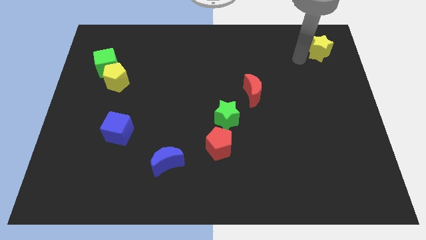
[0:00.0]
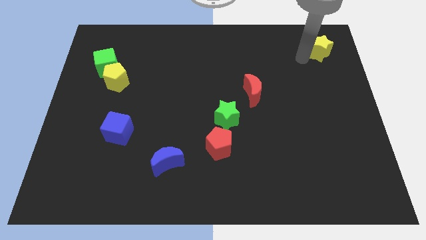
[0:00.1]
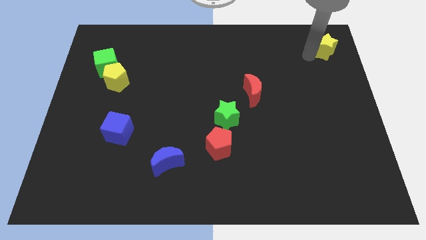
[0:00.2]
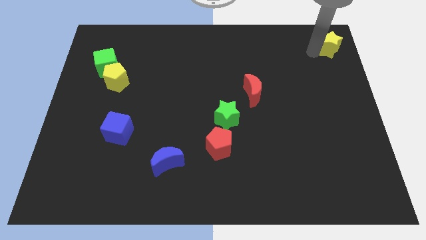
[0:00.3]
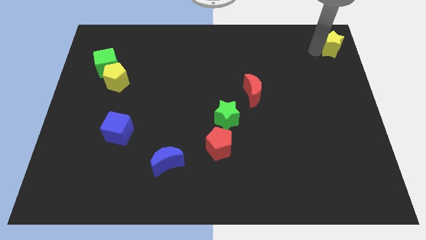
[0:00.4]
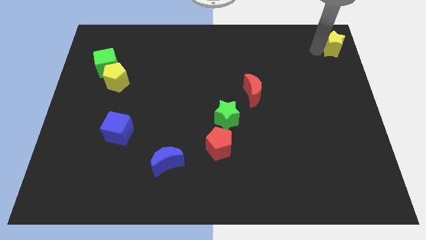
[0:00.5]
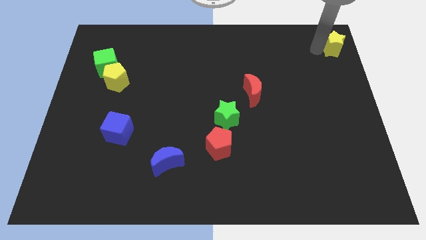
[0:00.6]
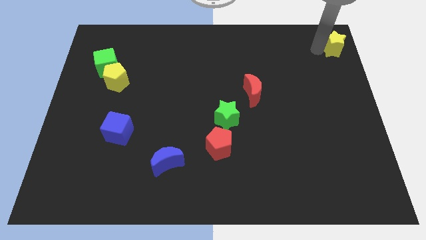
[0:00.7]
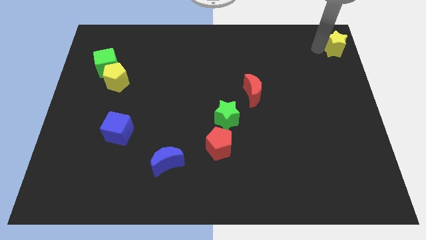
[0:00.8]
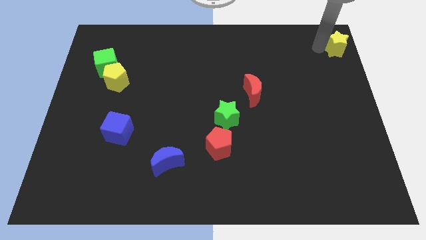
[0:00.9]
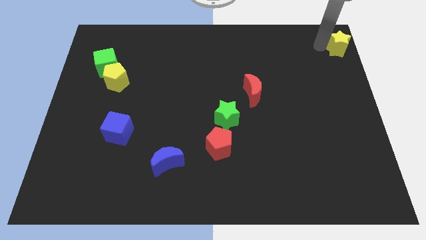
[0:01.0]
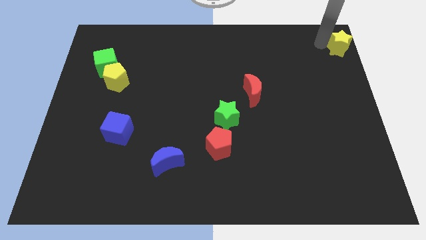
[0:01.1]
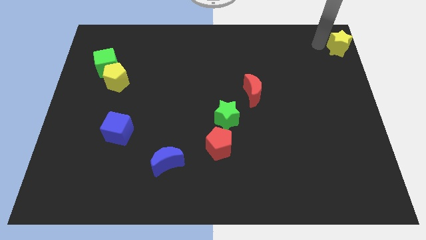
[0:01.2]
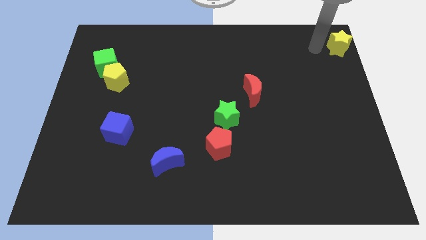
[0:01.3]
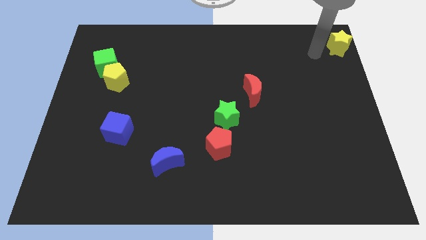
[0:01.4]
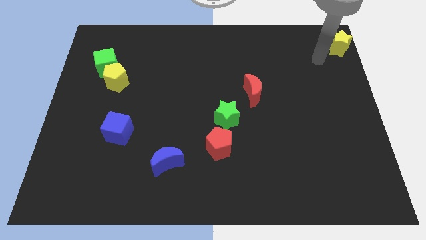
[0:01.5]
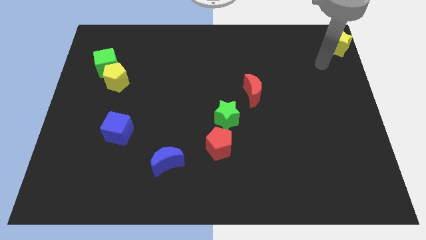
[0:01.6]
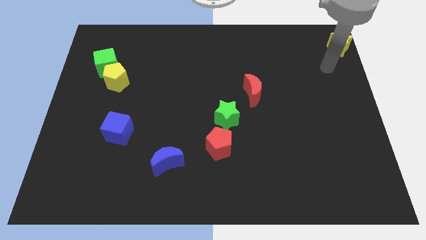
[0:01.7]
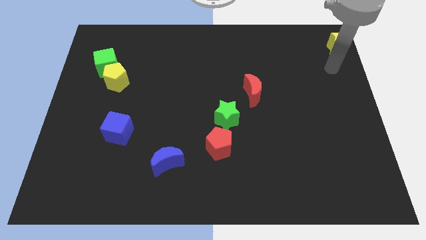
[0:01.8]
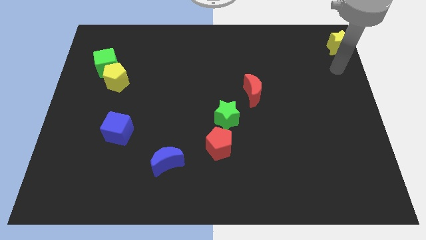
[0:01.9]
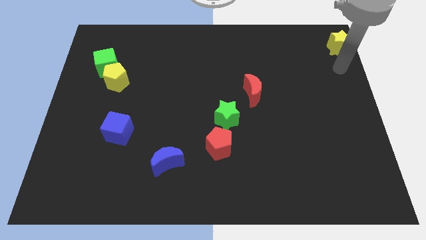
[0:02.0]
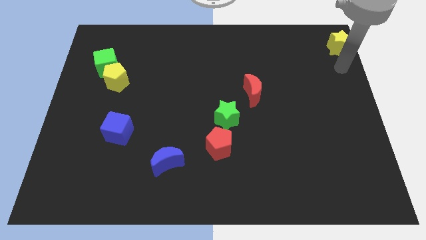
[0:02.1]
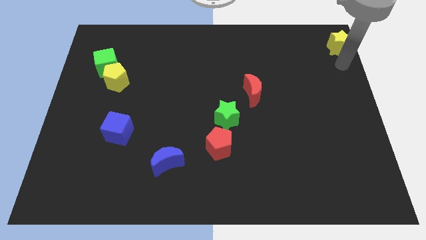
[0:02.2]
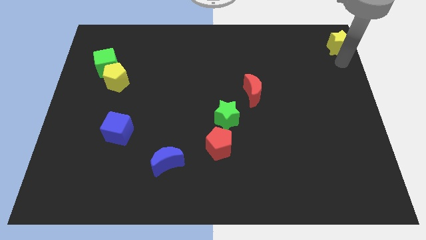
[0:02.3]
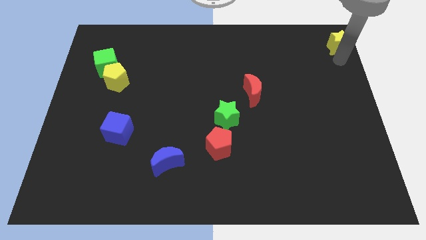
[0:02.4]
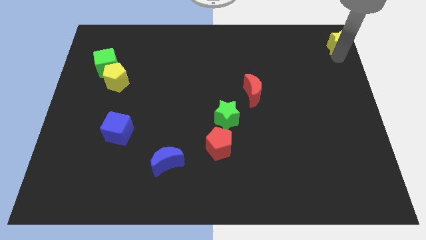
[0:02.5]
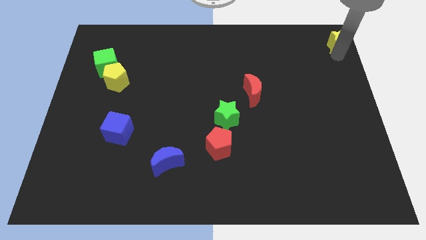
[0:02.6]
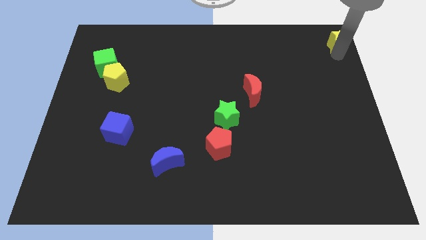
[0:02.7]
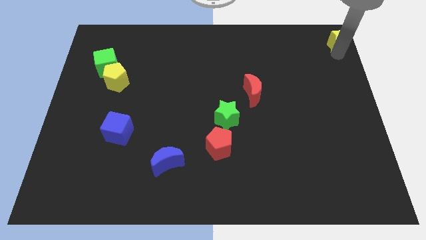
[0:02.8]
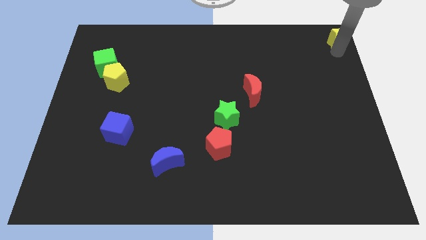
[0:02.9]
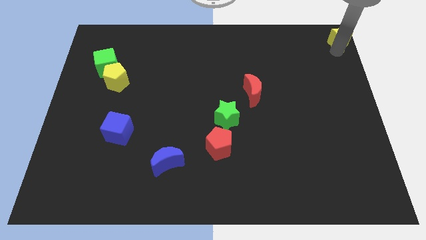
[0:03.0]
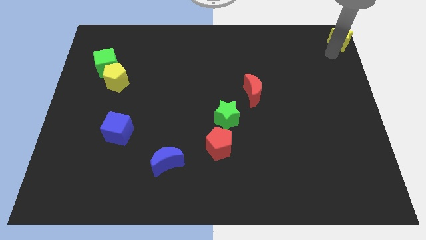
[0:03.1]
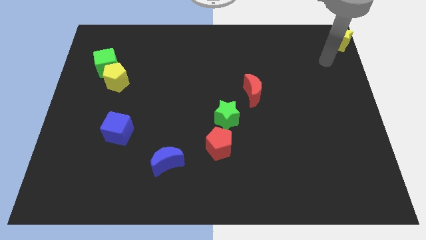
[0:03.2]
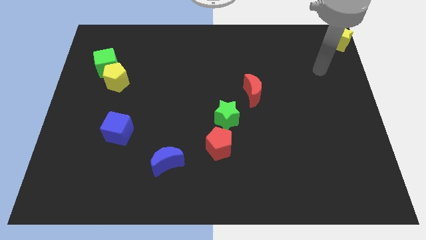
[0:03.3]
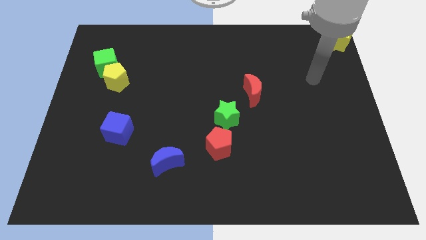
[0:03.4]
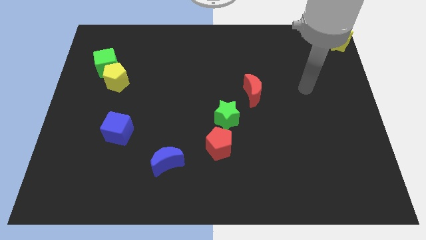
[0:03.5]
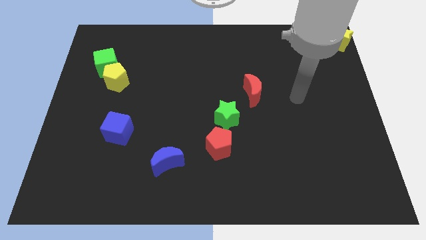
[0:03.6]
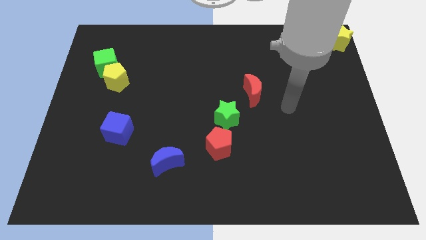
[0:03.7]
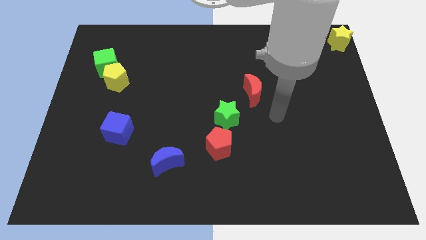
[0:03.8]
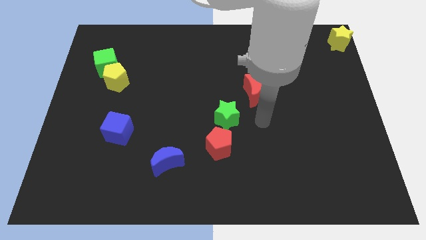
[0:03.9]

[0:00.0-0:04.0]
move yellow star to top right corner

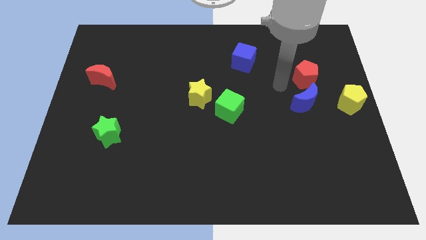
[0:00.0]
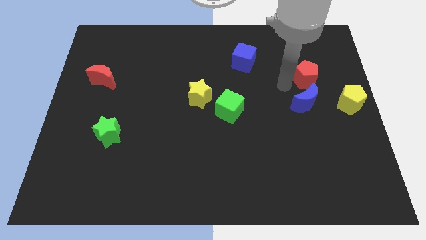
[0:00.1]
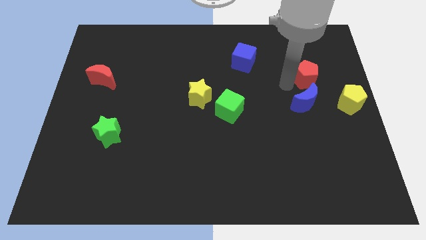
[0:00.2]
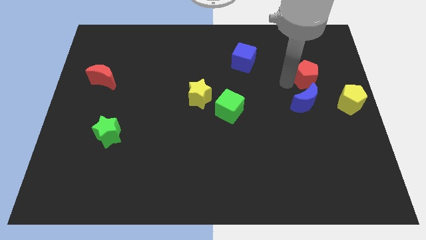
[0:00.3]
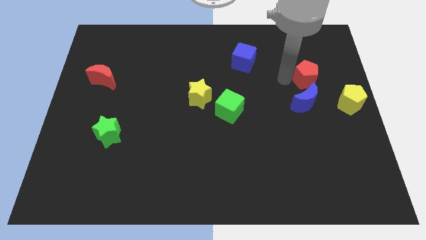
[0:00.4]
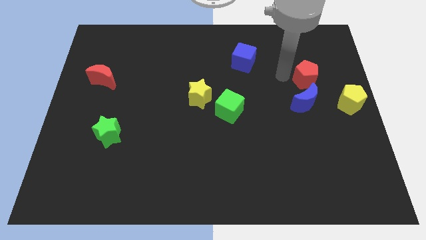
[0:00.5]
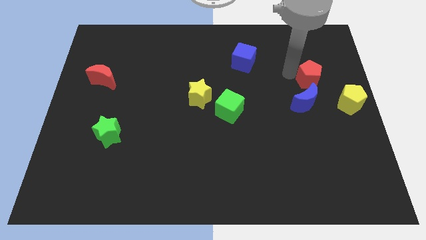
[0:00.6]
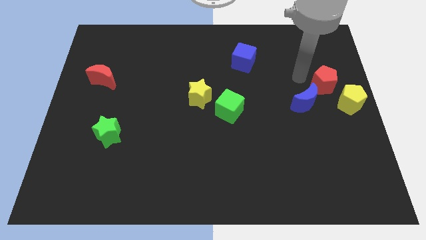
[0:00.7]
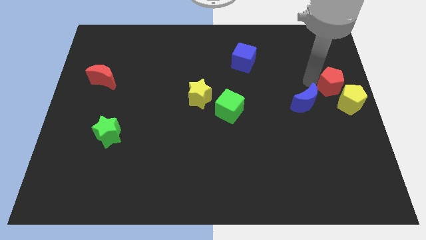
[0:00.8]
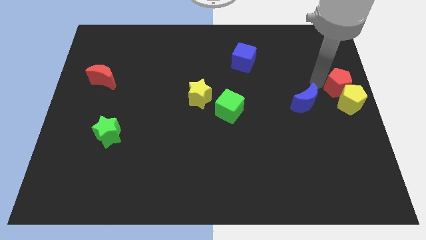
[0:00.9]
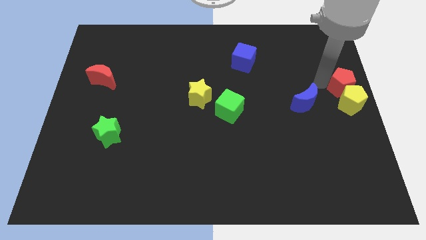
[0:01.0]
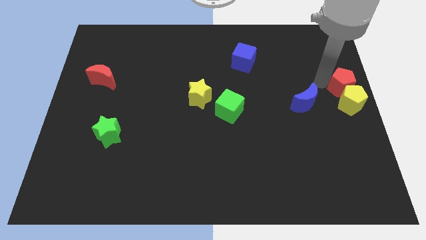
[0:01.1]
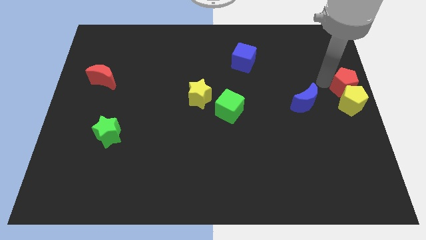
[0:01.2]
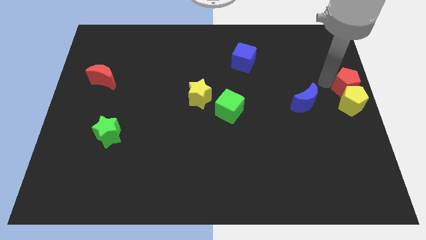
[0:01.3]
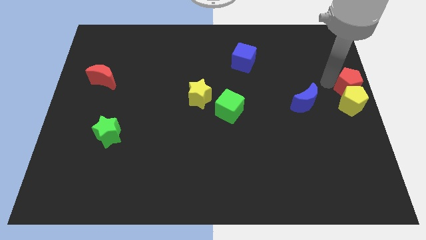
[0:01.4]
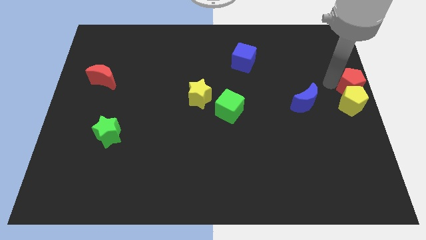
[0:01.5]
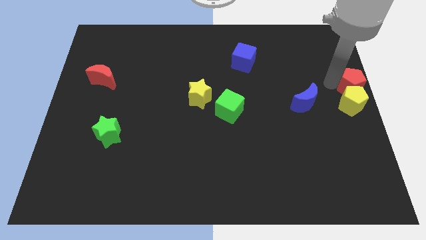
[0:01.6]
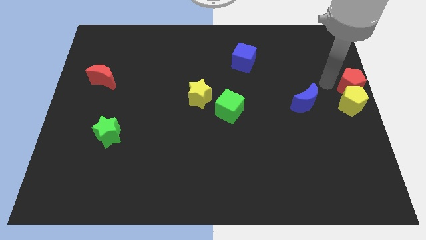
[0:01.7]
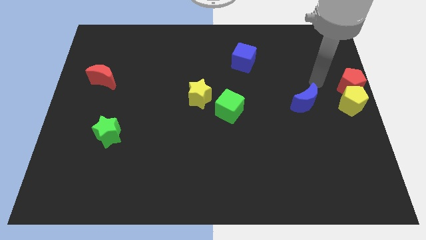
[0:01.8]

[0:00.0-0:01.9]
put the red pentagon to the top side of the yellow pentagon

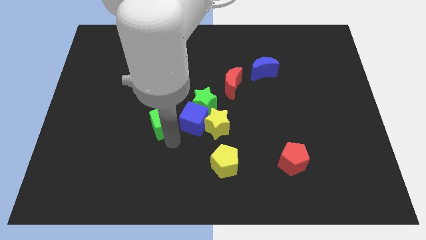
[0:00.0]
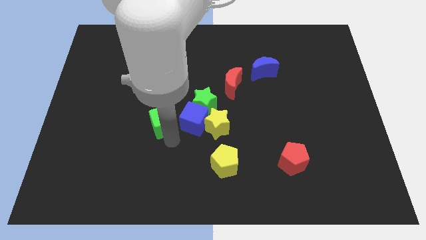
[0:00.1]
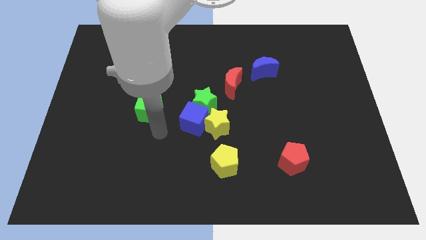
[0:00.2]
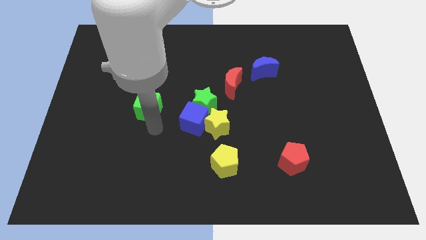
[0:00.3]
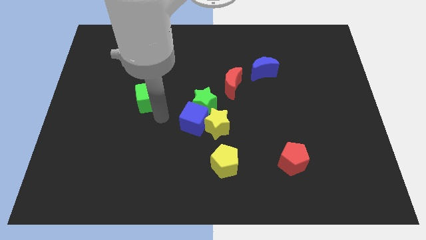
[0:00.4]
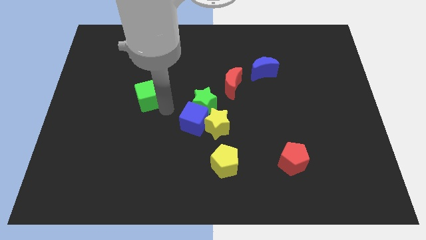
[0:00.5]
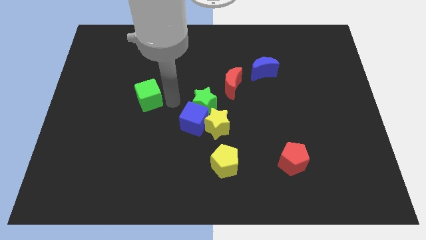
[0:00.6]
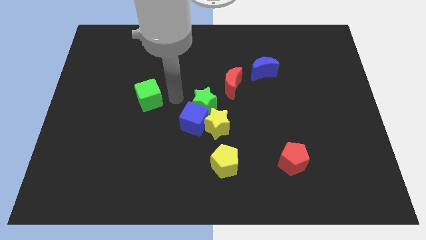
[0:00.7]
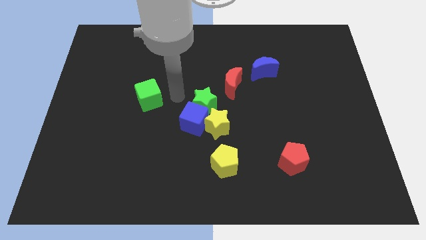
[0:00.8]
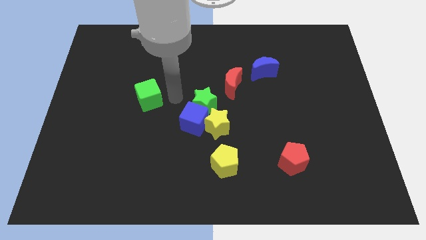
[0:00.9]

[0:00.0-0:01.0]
separate green cube from blue cube

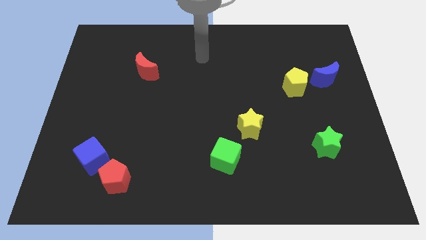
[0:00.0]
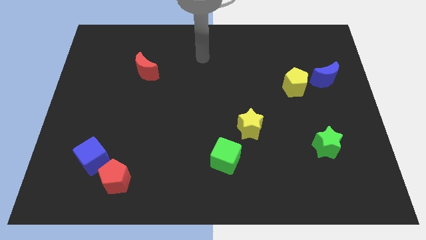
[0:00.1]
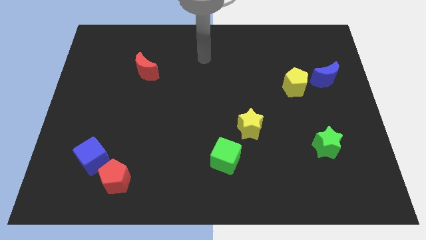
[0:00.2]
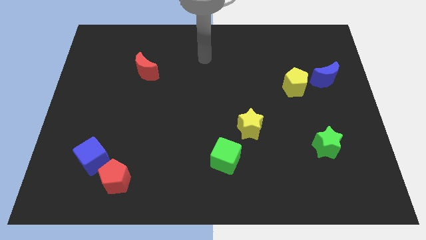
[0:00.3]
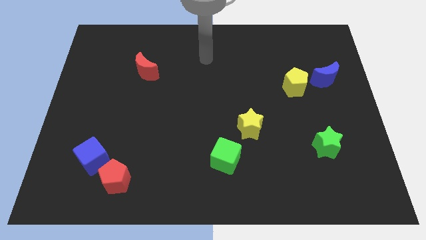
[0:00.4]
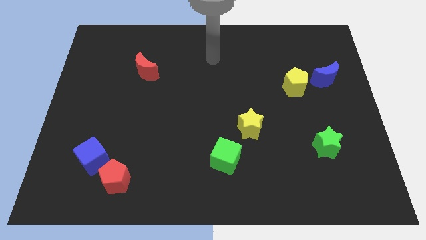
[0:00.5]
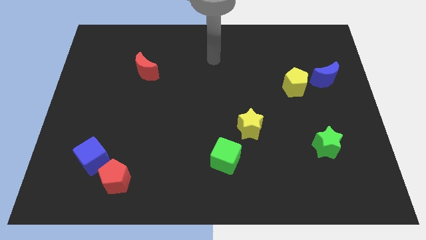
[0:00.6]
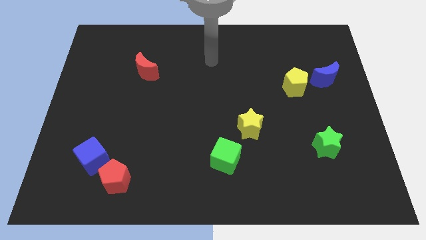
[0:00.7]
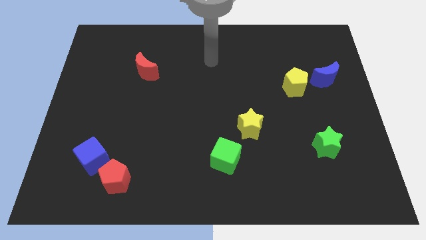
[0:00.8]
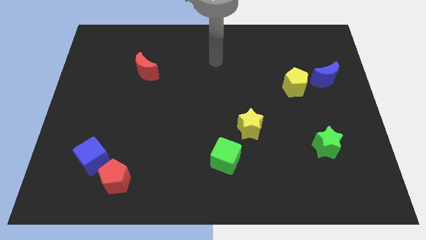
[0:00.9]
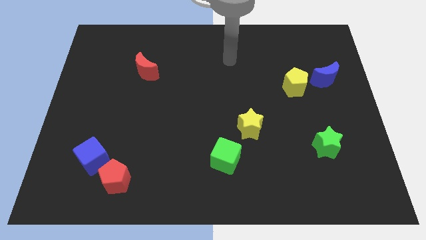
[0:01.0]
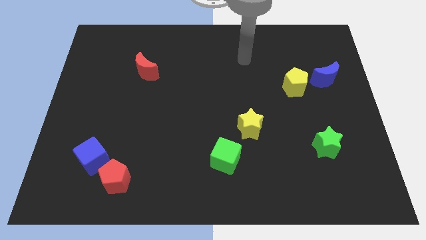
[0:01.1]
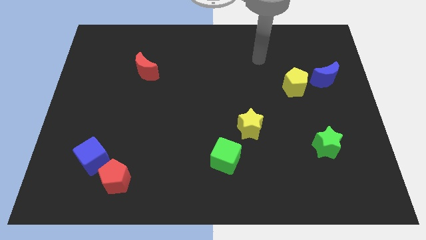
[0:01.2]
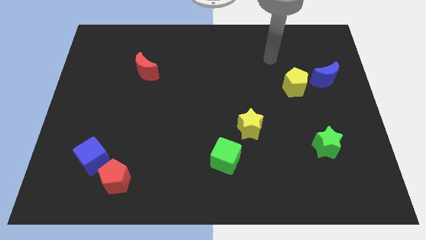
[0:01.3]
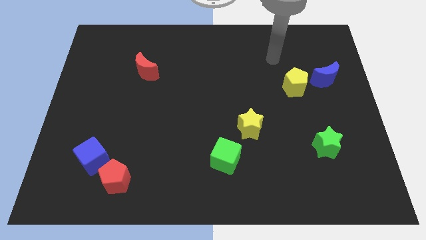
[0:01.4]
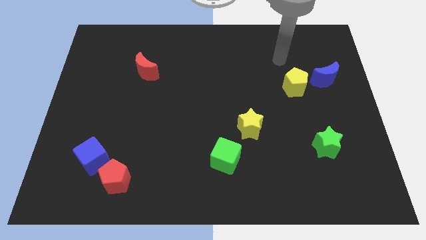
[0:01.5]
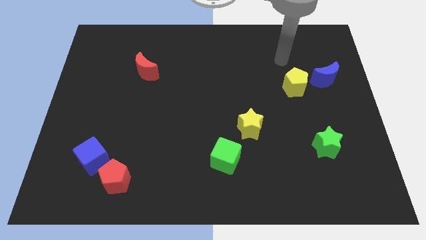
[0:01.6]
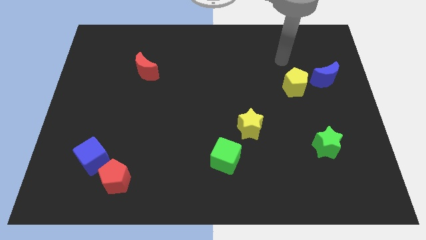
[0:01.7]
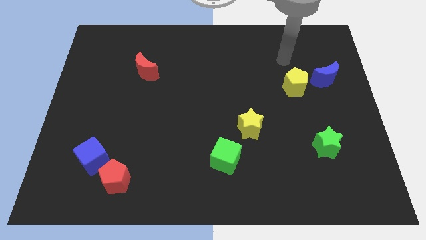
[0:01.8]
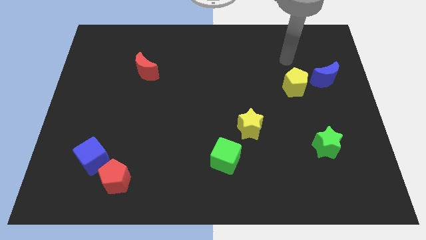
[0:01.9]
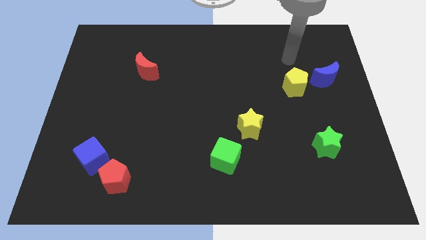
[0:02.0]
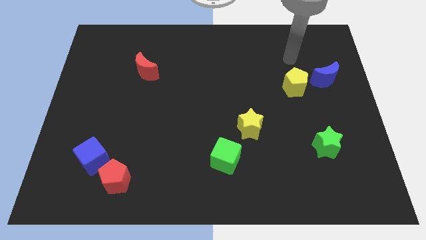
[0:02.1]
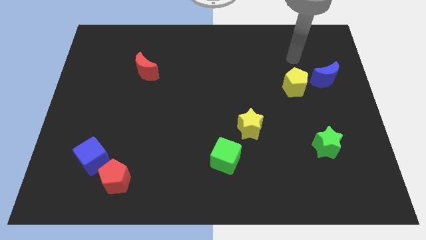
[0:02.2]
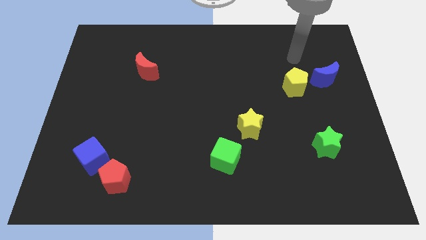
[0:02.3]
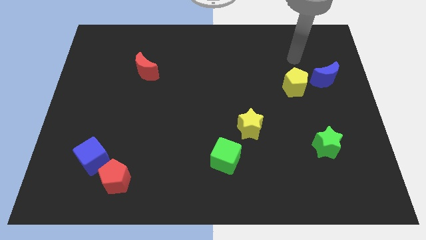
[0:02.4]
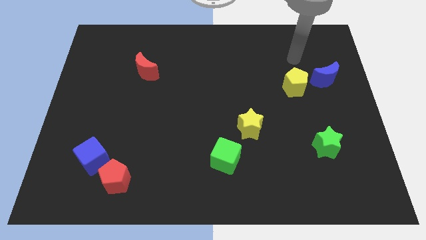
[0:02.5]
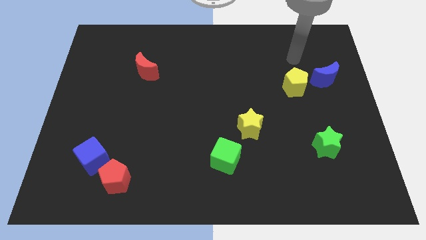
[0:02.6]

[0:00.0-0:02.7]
place your arm above the yellow pentagon
